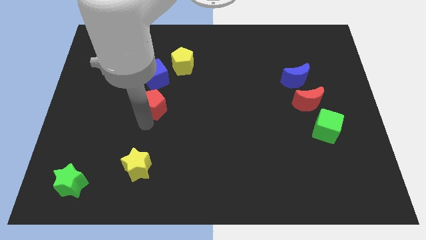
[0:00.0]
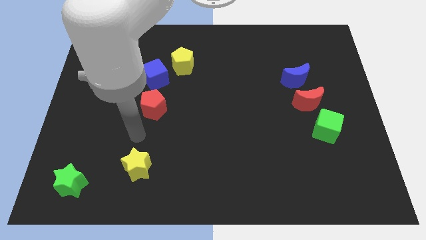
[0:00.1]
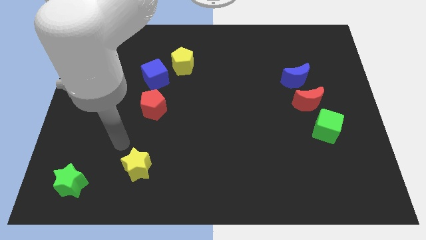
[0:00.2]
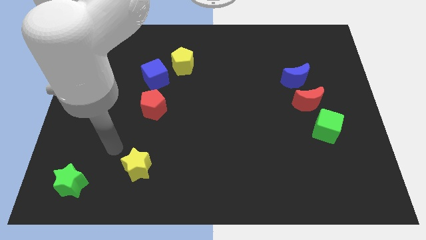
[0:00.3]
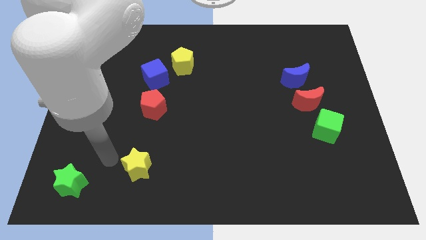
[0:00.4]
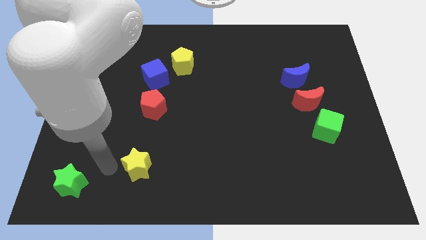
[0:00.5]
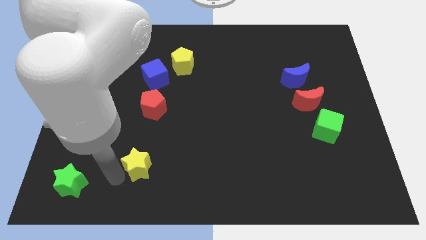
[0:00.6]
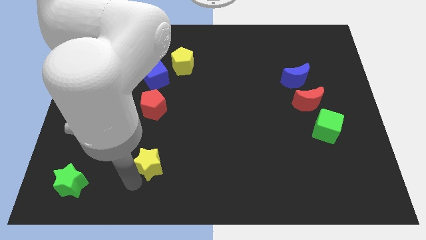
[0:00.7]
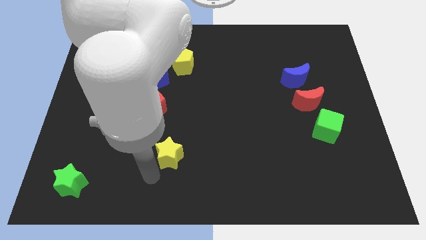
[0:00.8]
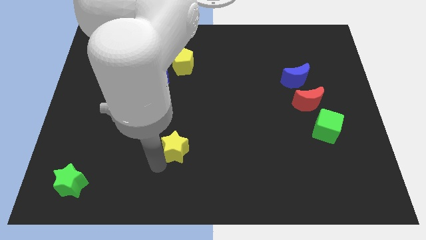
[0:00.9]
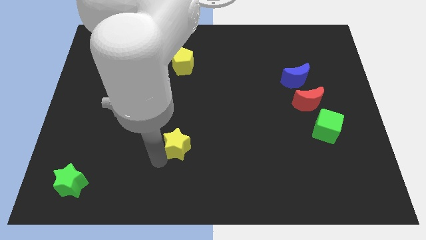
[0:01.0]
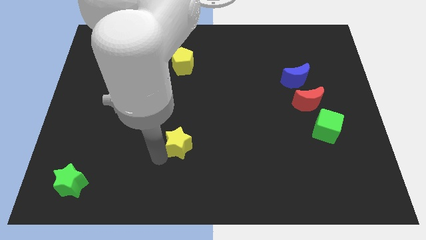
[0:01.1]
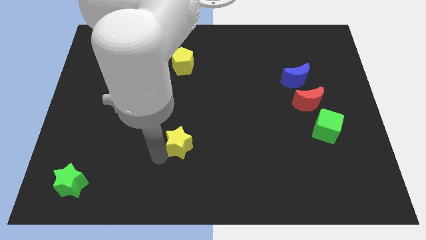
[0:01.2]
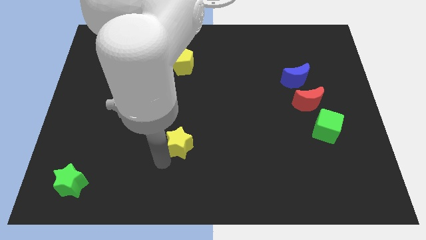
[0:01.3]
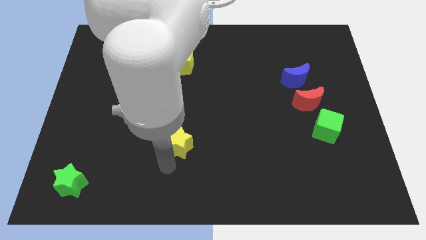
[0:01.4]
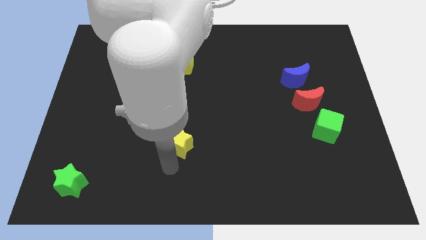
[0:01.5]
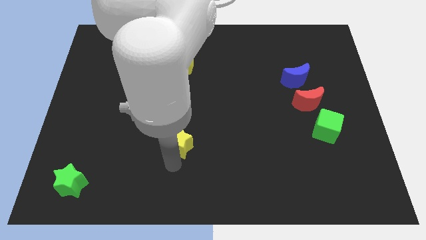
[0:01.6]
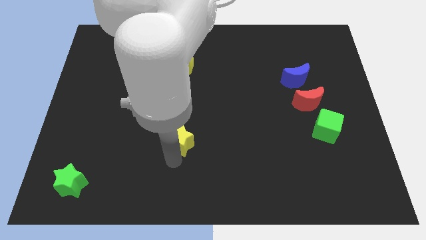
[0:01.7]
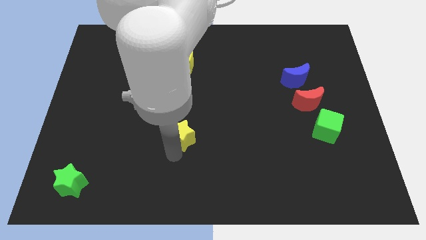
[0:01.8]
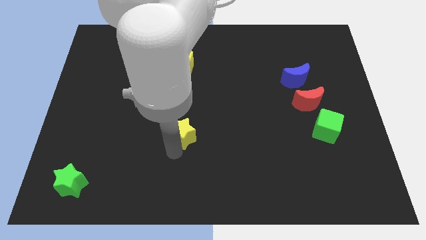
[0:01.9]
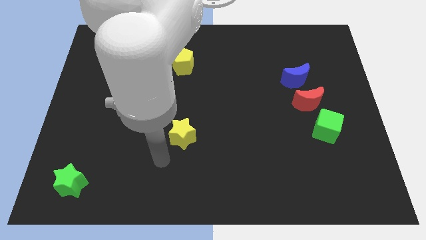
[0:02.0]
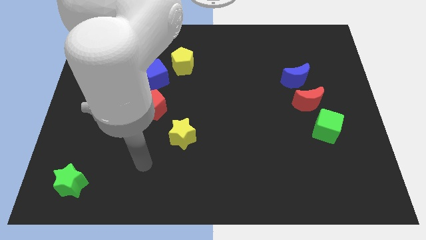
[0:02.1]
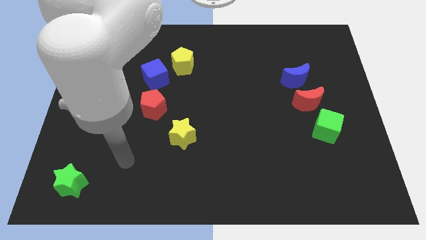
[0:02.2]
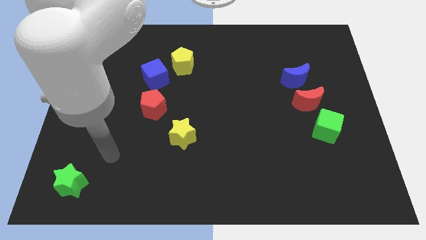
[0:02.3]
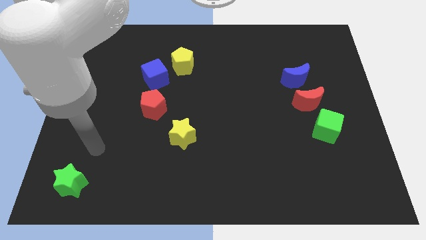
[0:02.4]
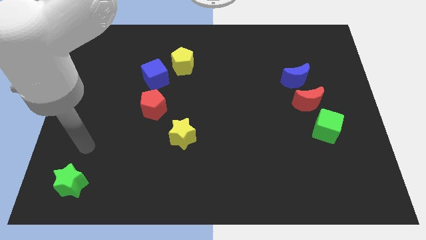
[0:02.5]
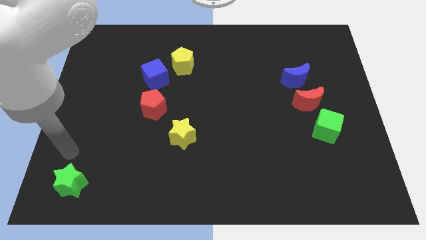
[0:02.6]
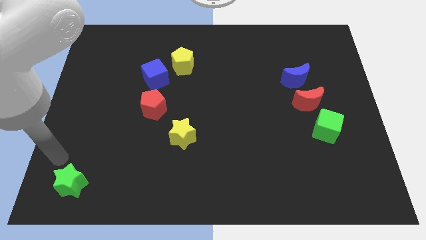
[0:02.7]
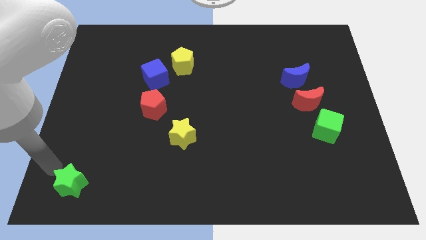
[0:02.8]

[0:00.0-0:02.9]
push the yellow star slightly upward

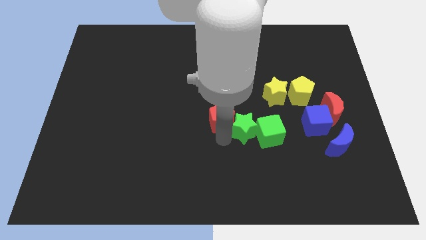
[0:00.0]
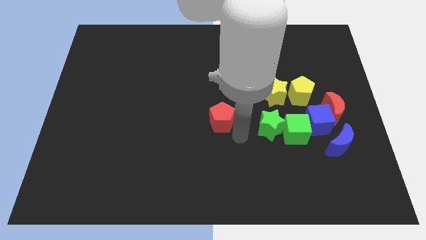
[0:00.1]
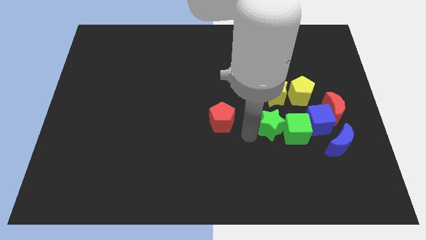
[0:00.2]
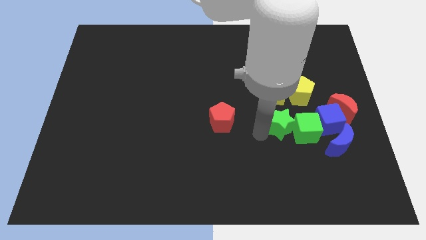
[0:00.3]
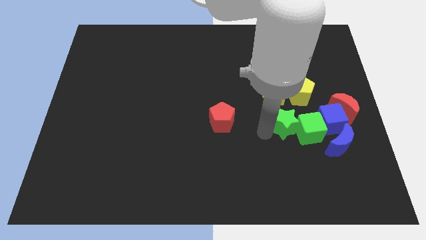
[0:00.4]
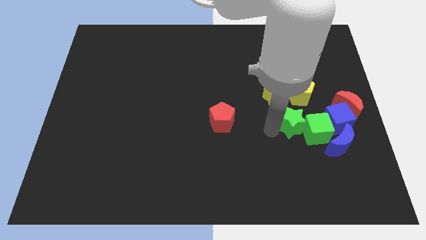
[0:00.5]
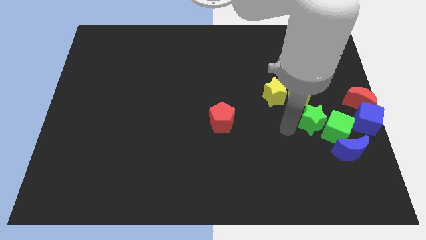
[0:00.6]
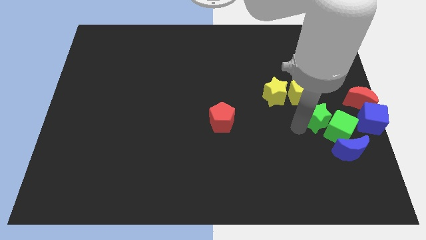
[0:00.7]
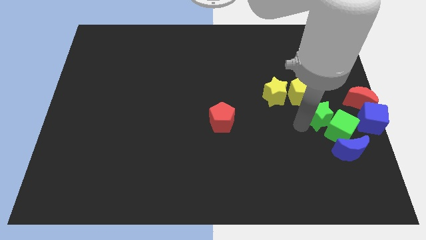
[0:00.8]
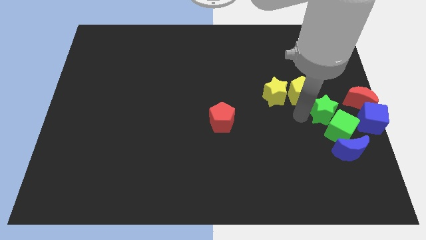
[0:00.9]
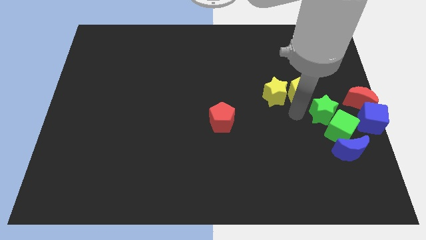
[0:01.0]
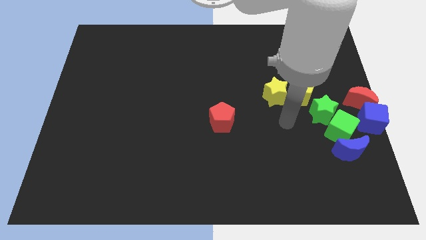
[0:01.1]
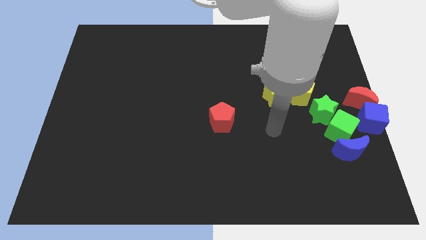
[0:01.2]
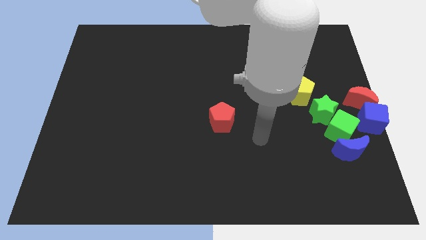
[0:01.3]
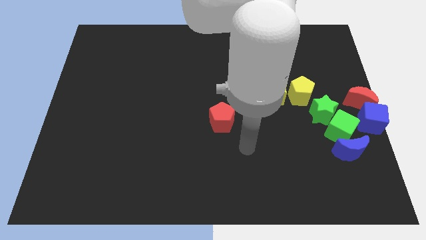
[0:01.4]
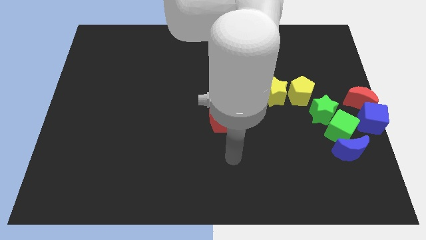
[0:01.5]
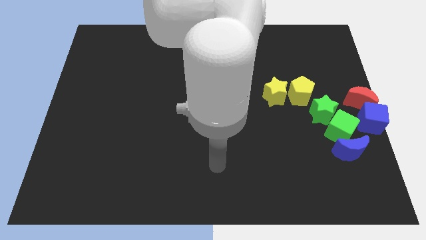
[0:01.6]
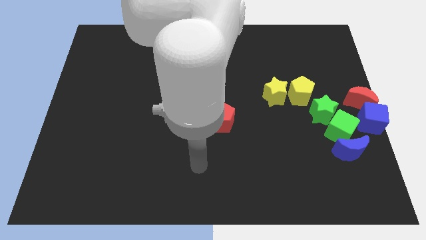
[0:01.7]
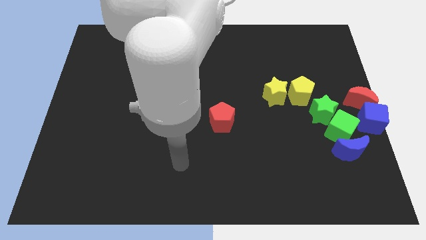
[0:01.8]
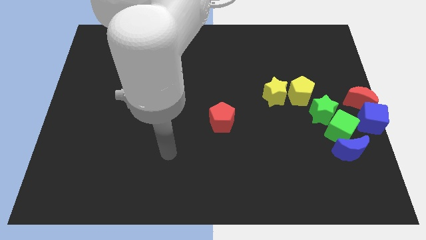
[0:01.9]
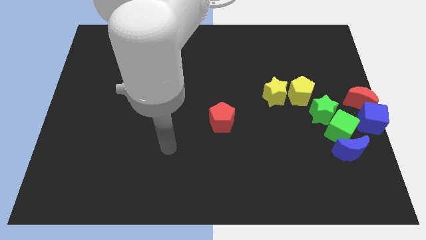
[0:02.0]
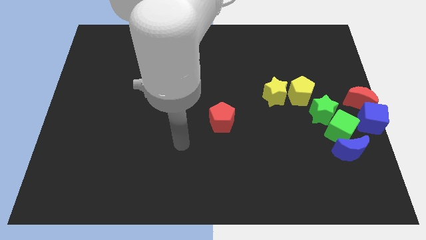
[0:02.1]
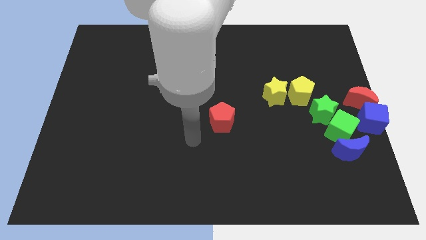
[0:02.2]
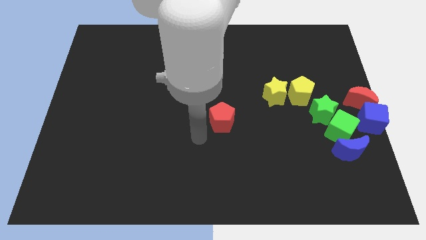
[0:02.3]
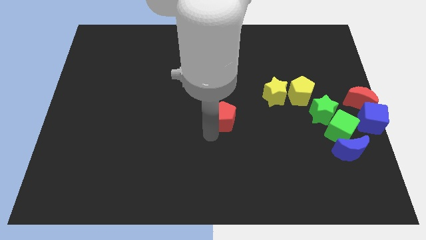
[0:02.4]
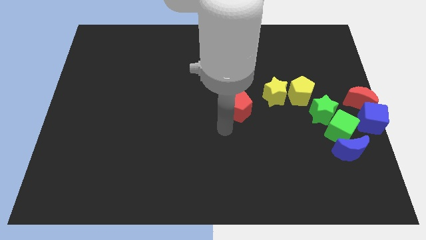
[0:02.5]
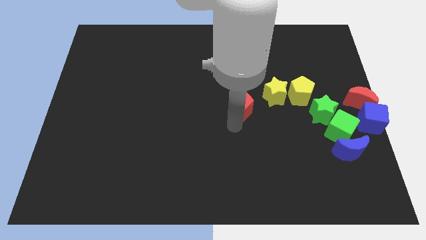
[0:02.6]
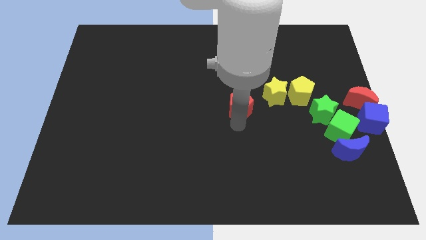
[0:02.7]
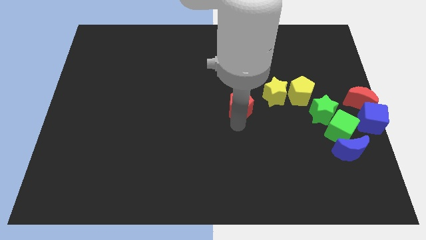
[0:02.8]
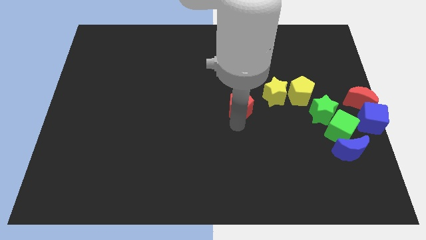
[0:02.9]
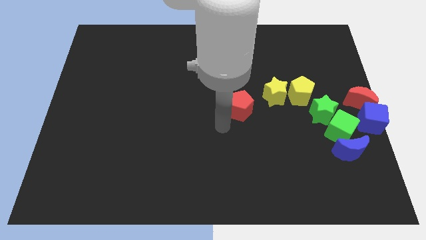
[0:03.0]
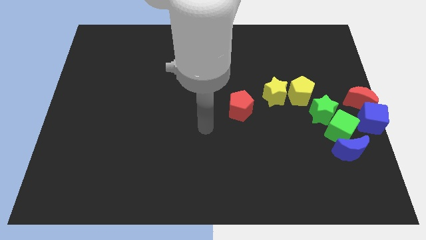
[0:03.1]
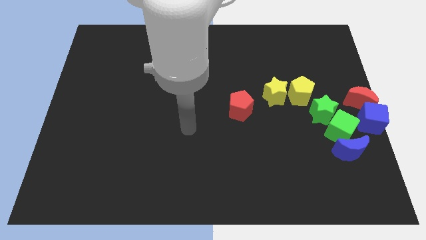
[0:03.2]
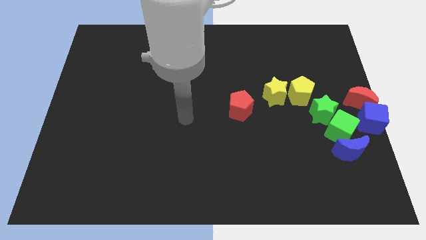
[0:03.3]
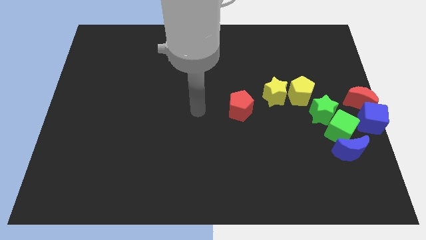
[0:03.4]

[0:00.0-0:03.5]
move the group of blocks towards the center right

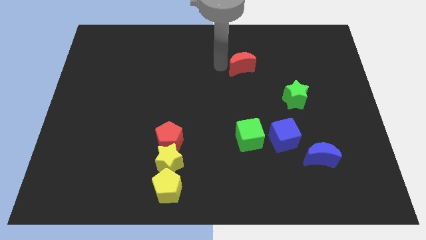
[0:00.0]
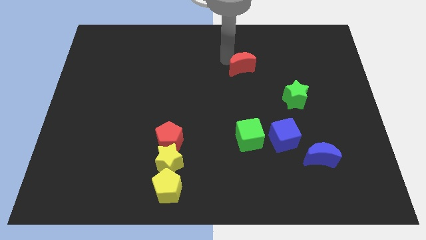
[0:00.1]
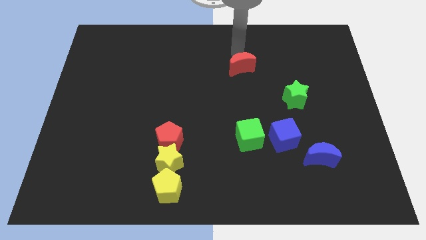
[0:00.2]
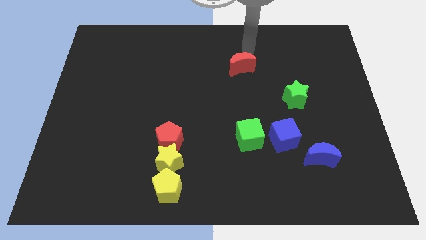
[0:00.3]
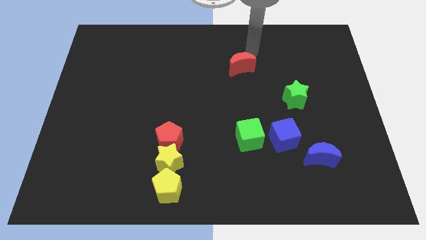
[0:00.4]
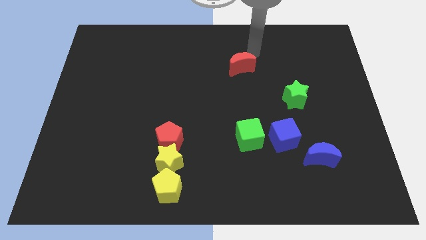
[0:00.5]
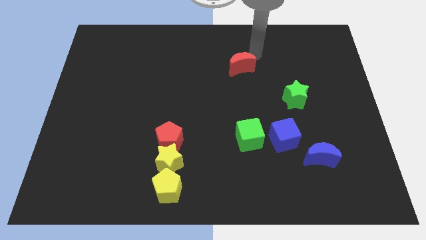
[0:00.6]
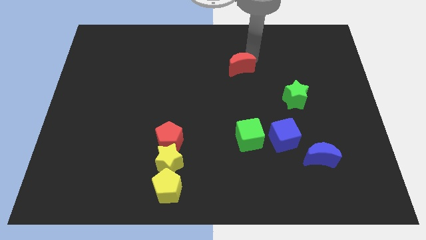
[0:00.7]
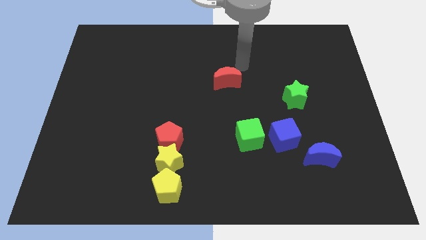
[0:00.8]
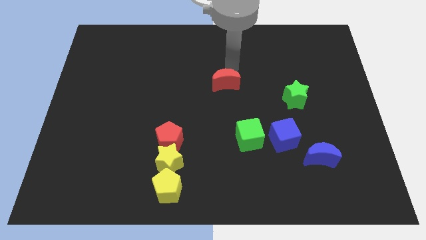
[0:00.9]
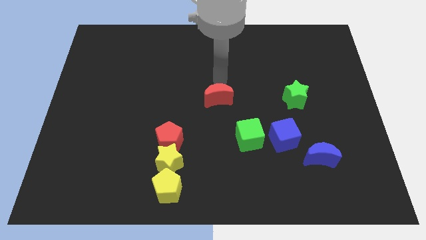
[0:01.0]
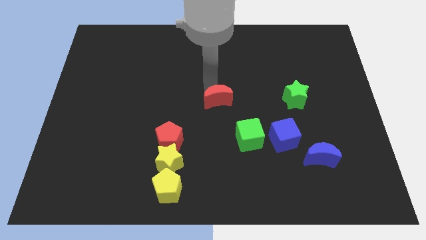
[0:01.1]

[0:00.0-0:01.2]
push the red pentagon to the center of the board

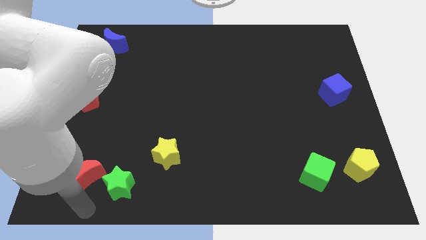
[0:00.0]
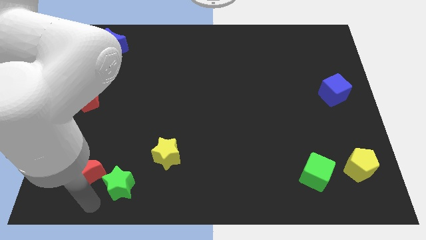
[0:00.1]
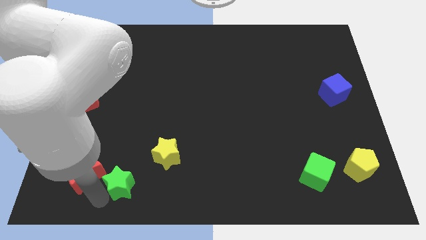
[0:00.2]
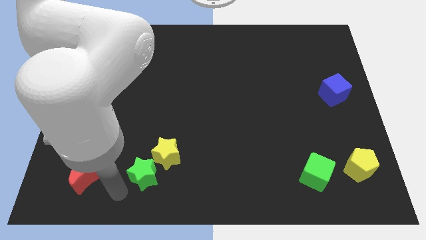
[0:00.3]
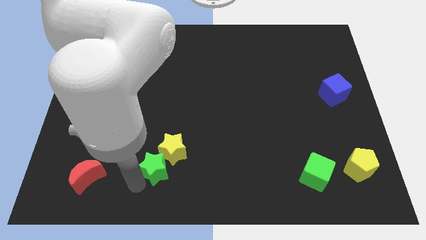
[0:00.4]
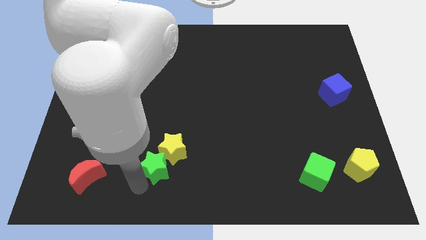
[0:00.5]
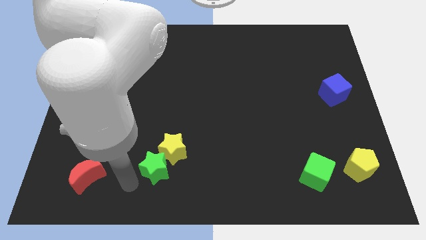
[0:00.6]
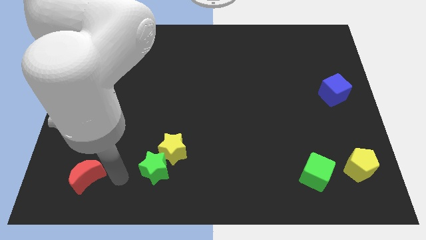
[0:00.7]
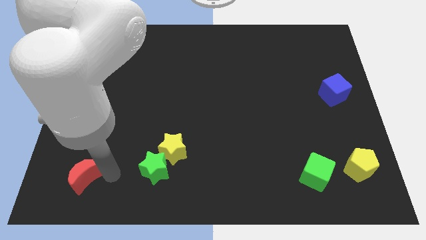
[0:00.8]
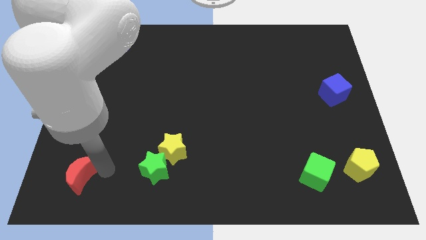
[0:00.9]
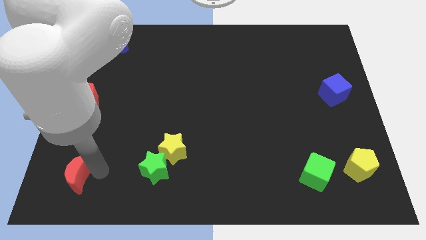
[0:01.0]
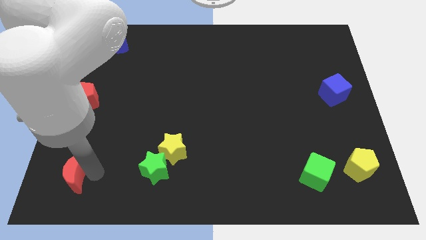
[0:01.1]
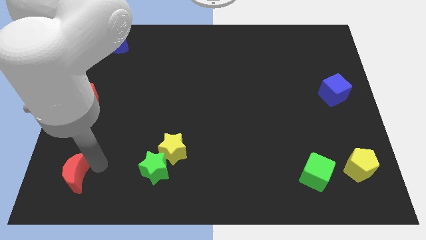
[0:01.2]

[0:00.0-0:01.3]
separate the green star and the red crescent
